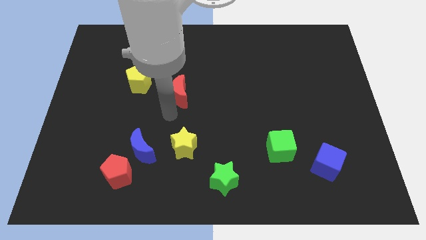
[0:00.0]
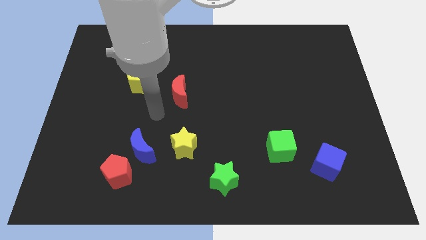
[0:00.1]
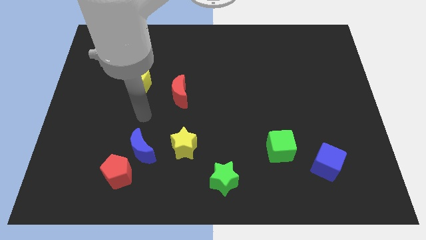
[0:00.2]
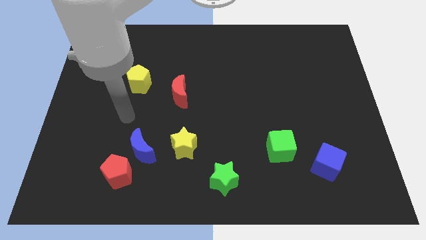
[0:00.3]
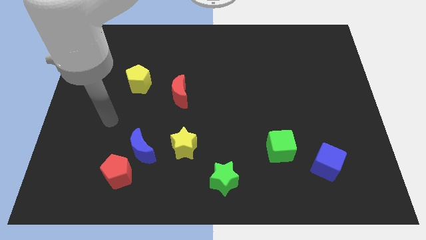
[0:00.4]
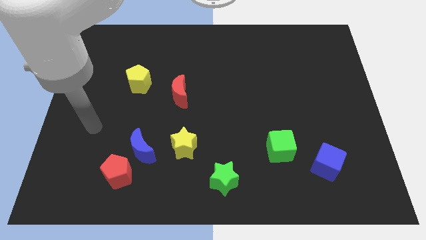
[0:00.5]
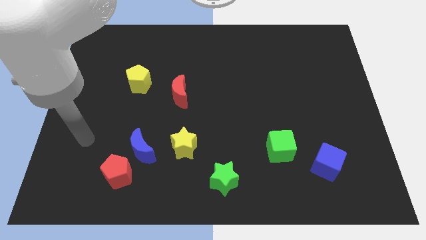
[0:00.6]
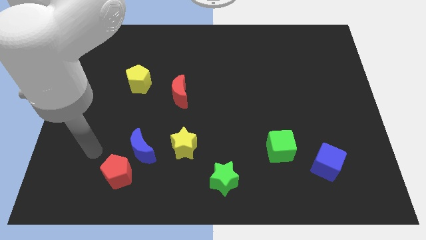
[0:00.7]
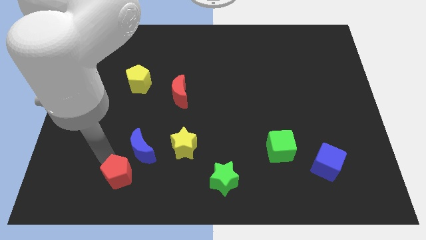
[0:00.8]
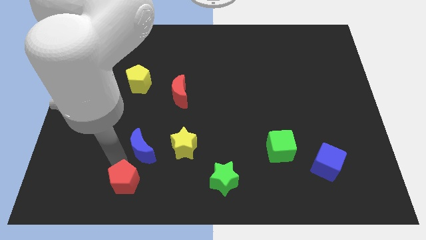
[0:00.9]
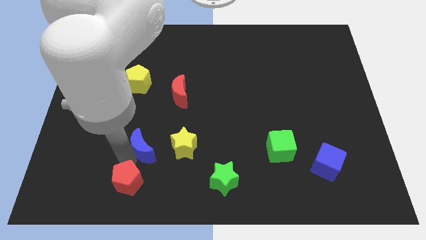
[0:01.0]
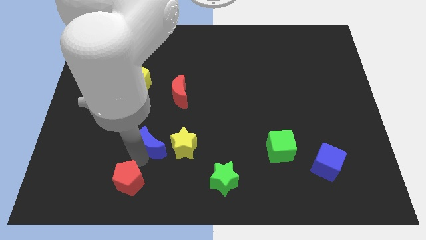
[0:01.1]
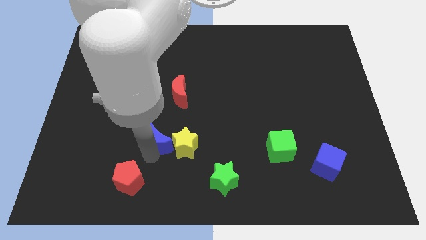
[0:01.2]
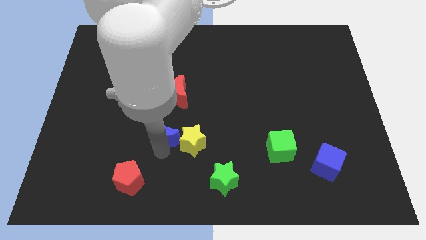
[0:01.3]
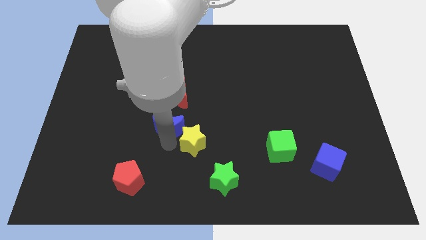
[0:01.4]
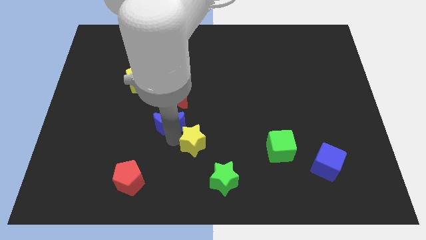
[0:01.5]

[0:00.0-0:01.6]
push the blue moon to the bottom side of the red moon

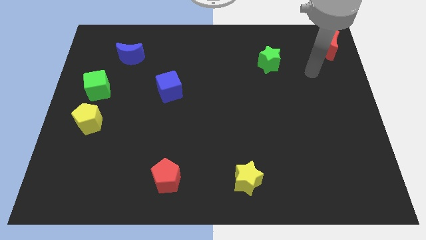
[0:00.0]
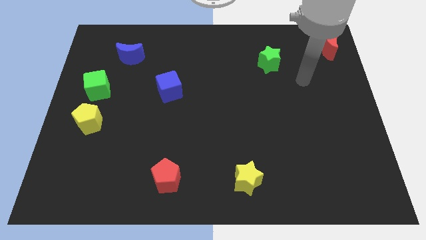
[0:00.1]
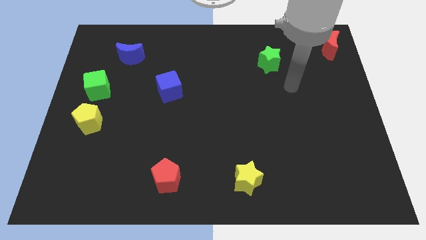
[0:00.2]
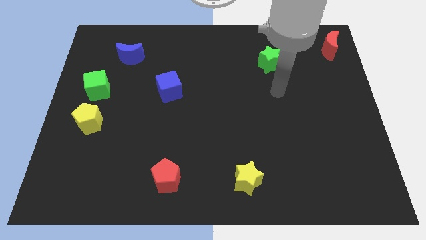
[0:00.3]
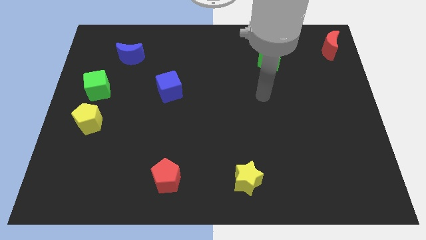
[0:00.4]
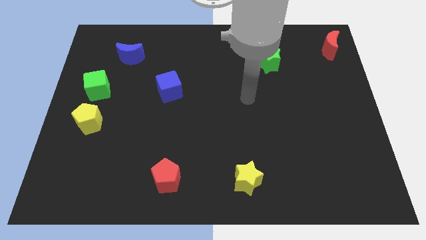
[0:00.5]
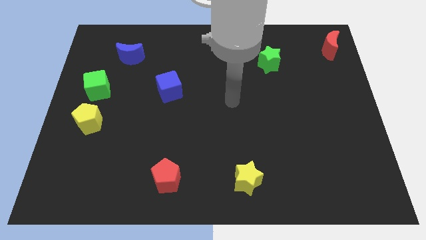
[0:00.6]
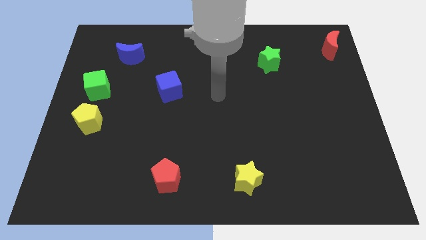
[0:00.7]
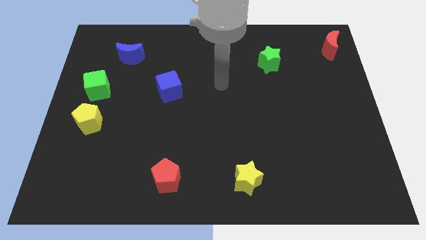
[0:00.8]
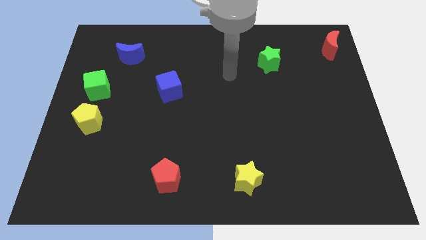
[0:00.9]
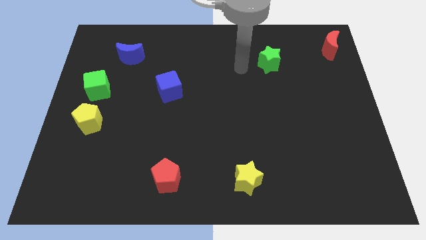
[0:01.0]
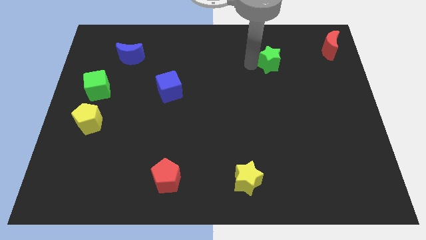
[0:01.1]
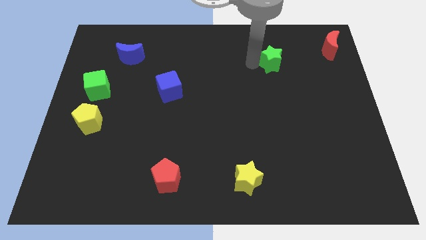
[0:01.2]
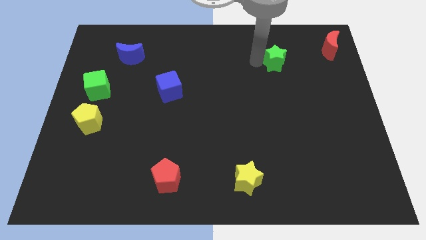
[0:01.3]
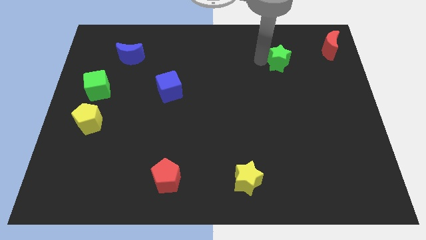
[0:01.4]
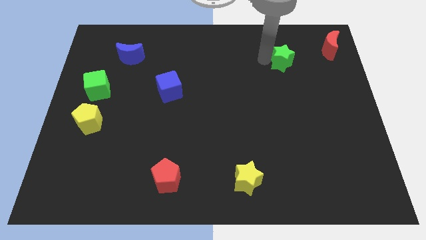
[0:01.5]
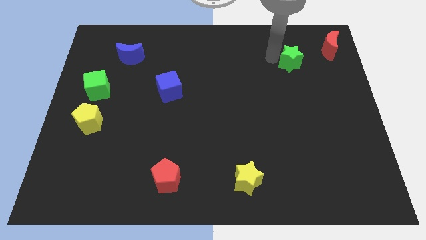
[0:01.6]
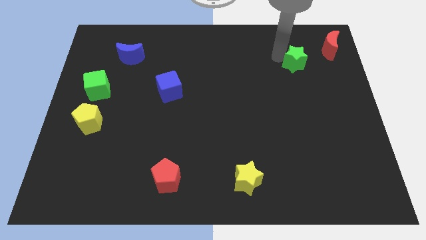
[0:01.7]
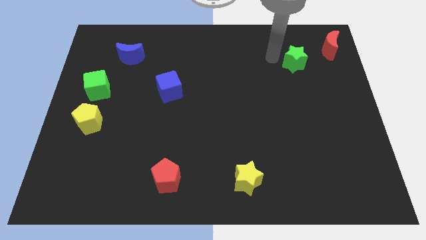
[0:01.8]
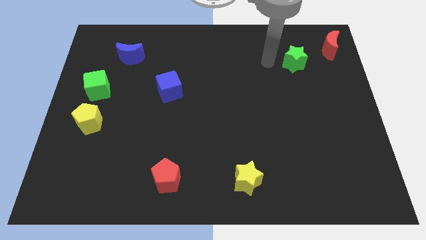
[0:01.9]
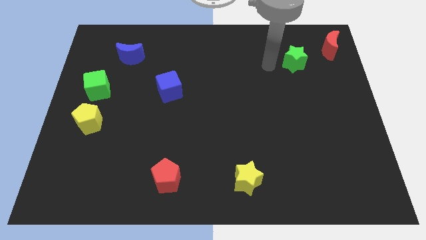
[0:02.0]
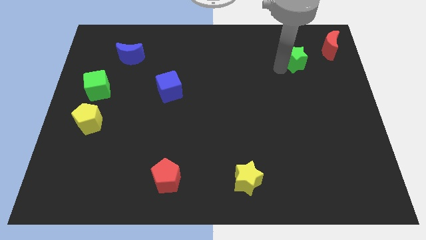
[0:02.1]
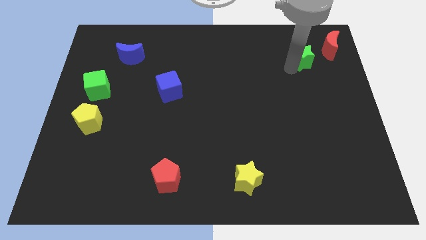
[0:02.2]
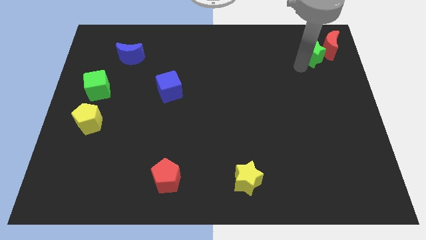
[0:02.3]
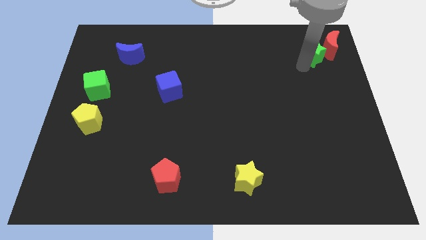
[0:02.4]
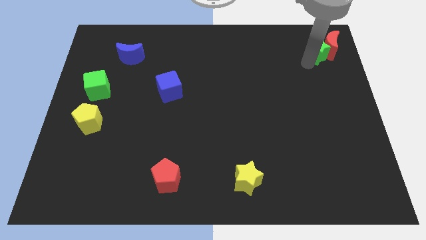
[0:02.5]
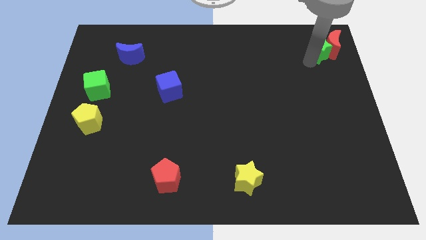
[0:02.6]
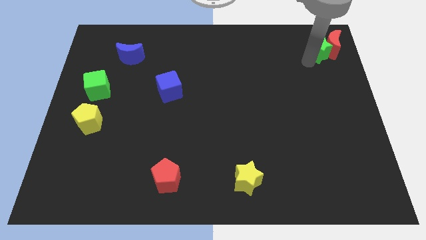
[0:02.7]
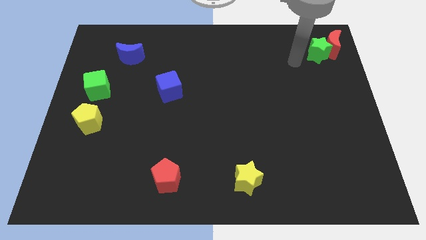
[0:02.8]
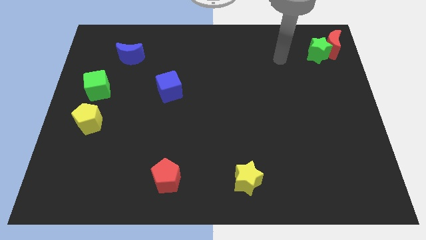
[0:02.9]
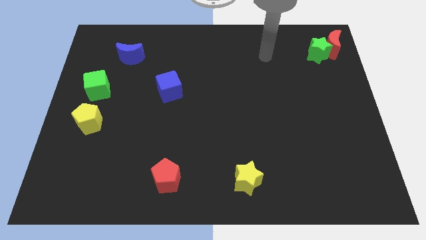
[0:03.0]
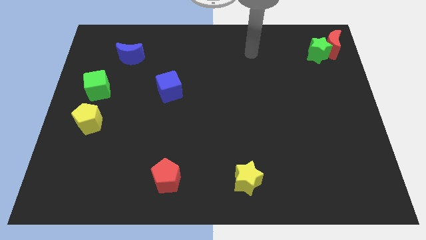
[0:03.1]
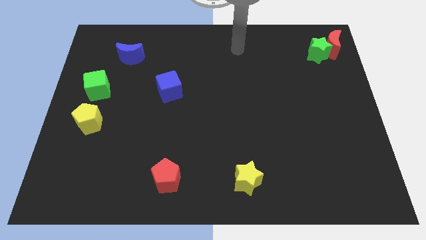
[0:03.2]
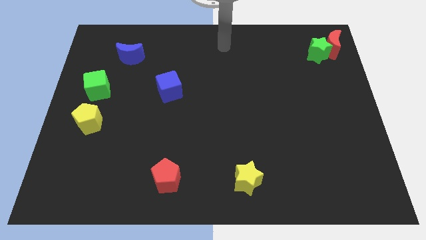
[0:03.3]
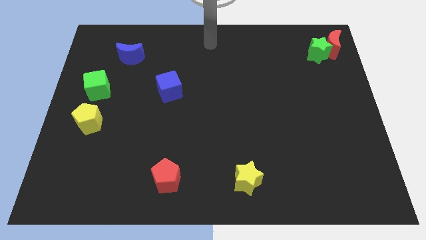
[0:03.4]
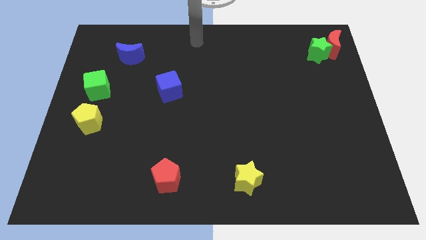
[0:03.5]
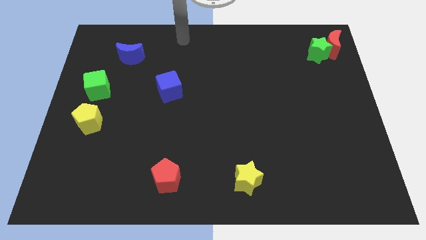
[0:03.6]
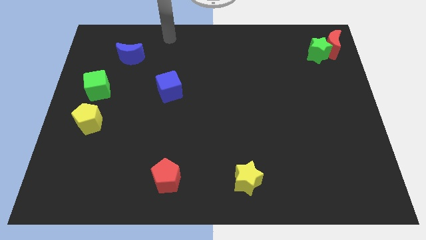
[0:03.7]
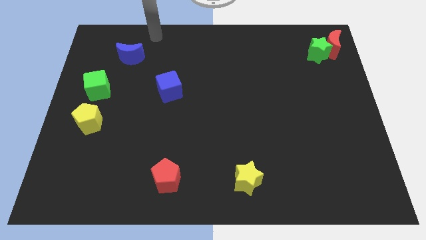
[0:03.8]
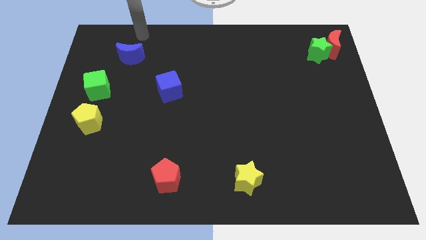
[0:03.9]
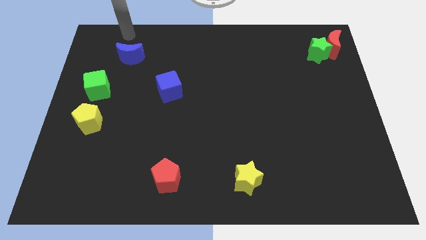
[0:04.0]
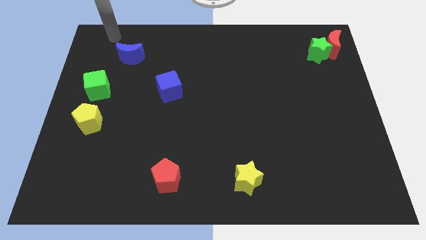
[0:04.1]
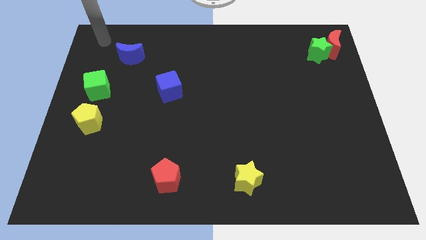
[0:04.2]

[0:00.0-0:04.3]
push the green star to the left of the red crescent

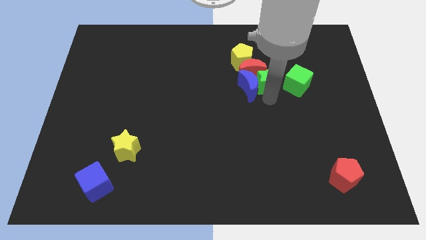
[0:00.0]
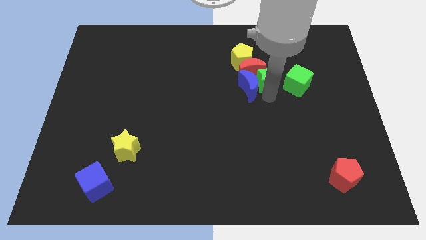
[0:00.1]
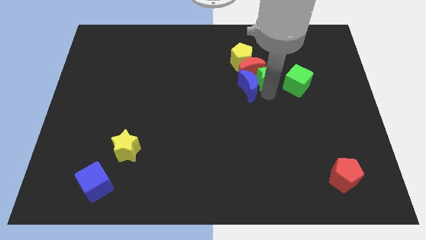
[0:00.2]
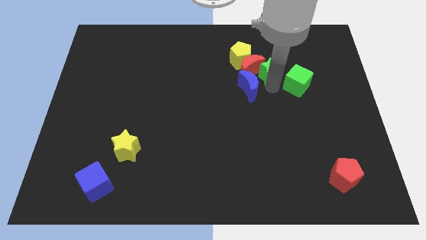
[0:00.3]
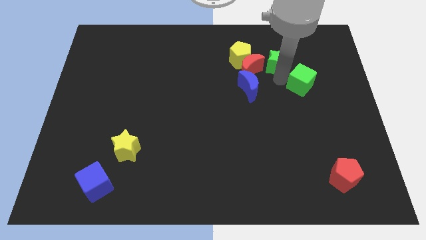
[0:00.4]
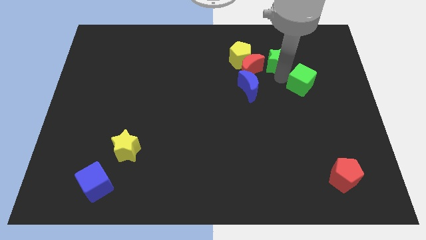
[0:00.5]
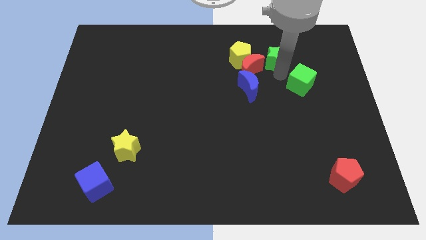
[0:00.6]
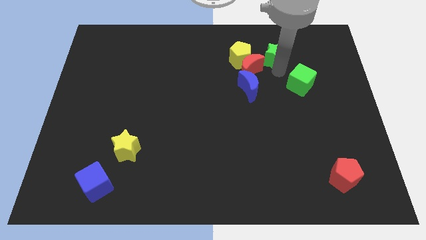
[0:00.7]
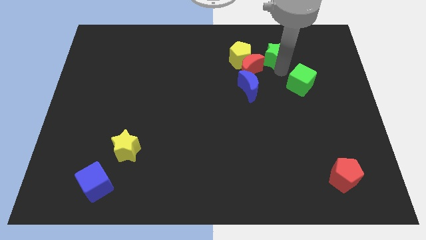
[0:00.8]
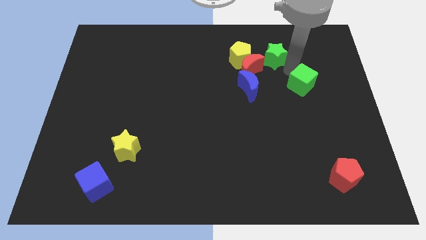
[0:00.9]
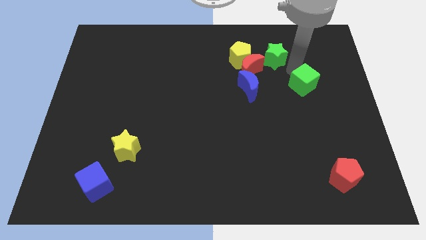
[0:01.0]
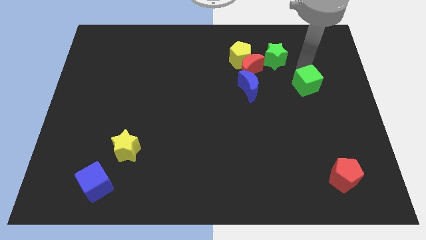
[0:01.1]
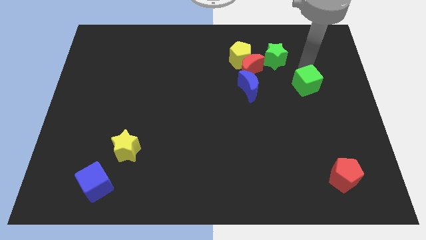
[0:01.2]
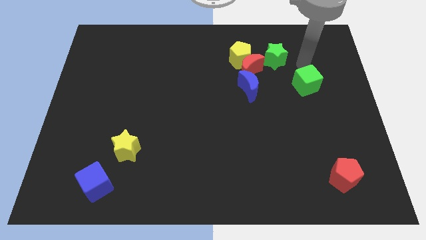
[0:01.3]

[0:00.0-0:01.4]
push the green star slightly to the top

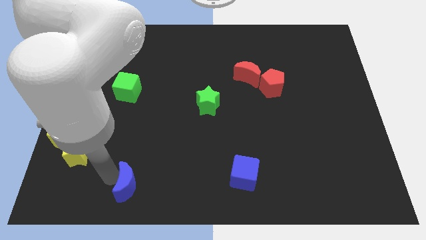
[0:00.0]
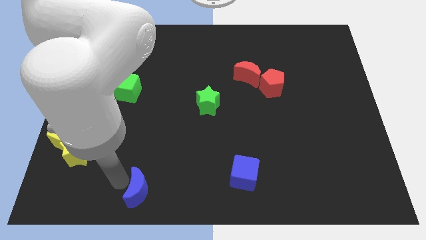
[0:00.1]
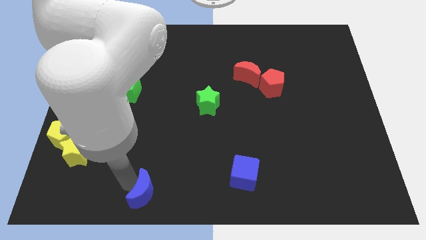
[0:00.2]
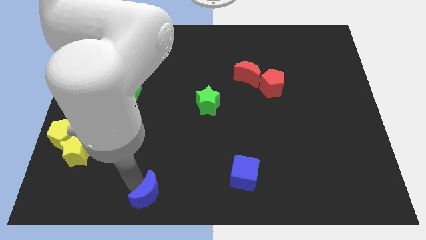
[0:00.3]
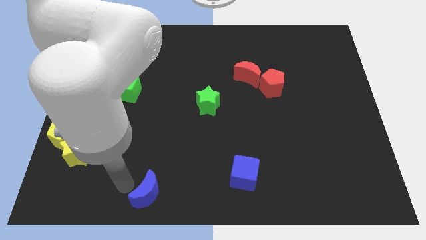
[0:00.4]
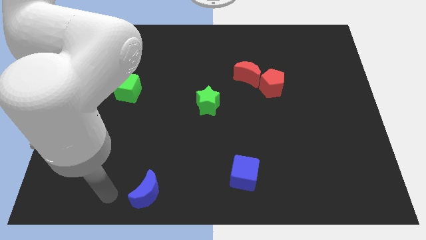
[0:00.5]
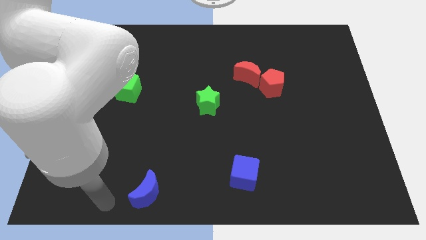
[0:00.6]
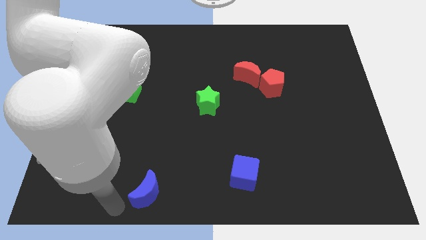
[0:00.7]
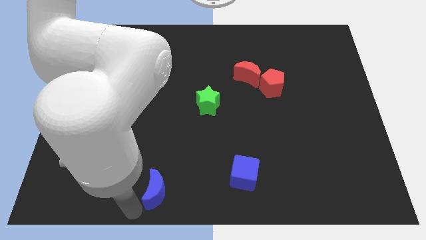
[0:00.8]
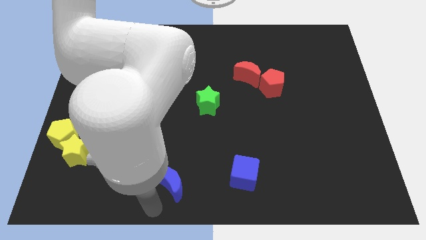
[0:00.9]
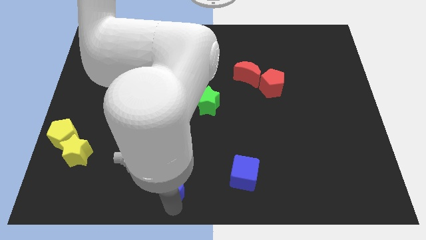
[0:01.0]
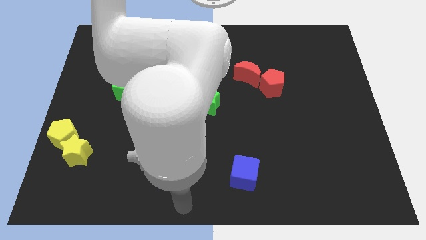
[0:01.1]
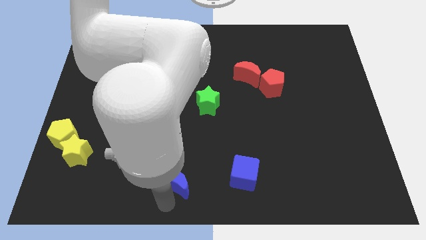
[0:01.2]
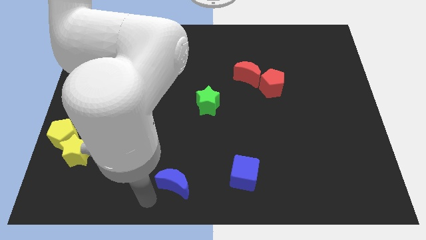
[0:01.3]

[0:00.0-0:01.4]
move the blue crescent towards the bottom center

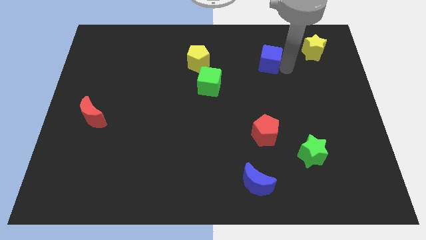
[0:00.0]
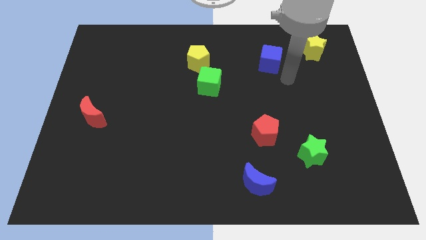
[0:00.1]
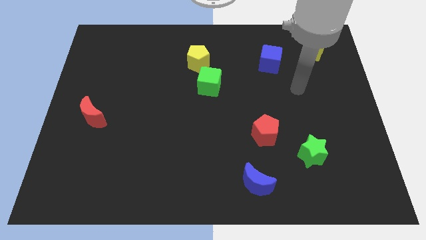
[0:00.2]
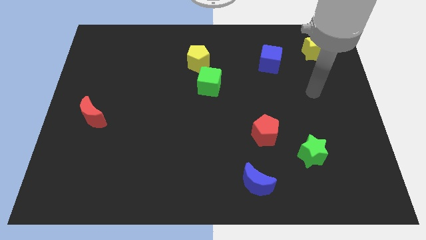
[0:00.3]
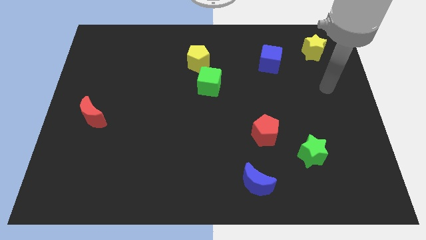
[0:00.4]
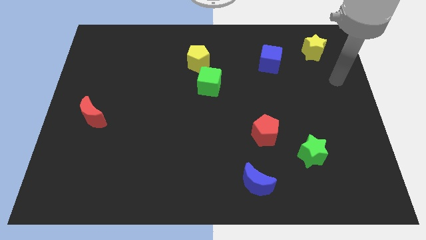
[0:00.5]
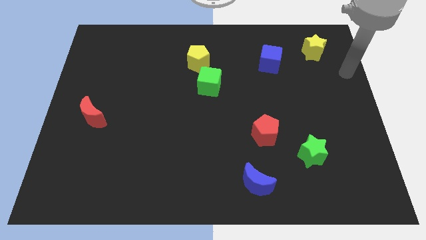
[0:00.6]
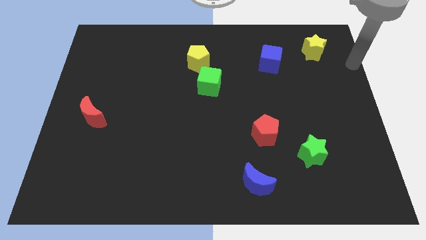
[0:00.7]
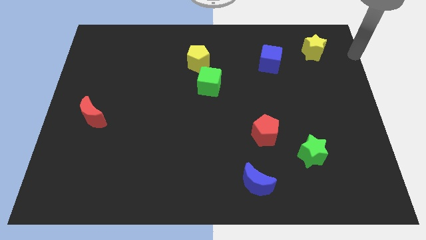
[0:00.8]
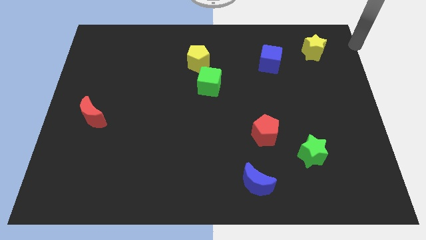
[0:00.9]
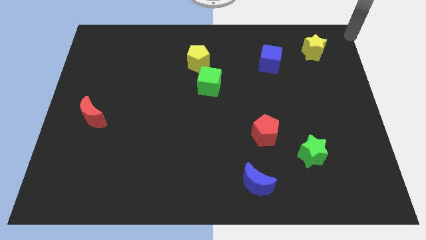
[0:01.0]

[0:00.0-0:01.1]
move your arm away from the blue cube
